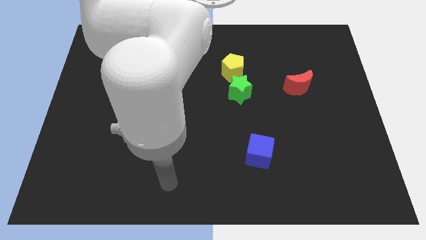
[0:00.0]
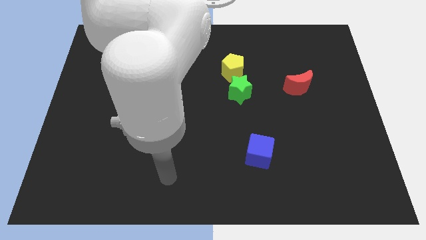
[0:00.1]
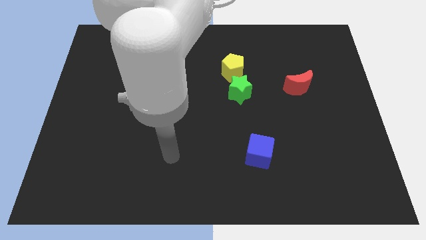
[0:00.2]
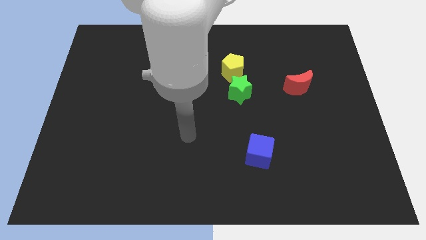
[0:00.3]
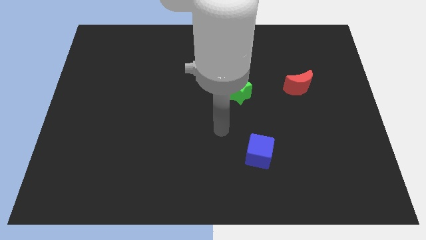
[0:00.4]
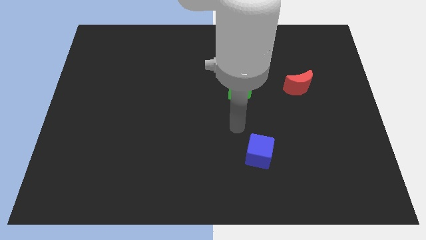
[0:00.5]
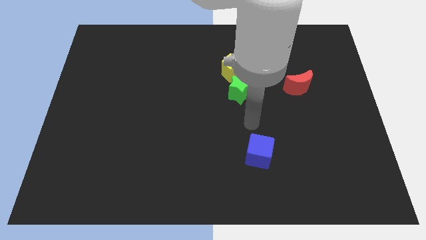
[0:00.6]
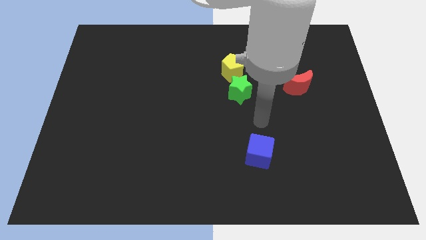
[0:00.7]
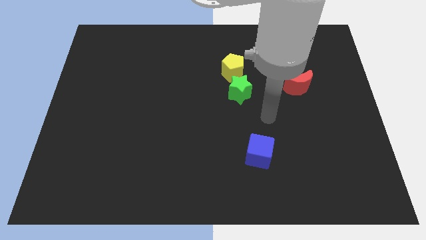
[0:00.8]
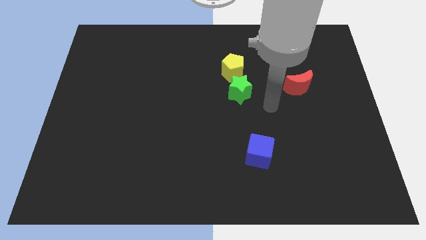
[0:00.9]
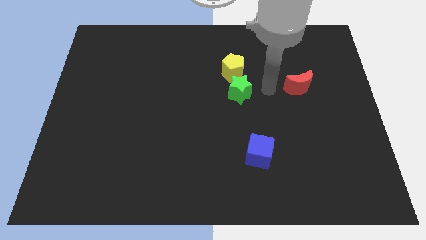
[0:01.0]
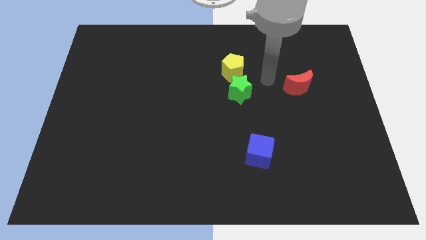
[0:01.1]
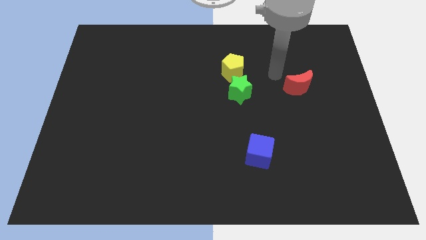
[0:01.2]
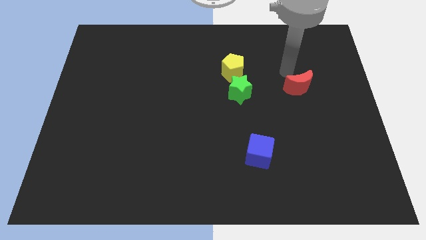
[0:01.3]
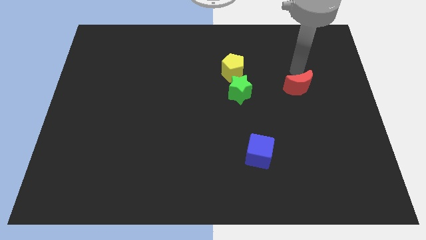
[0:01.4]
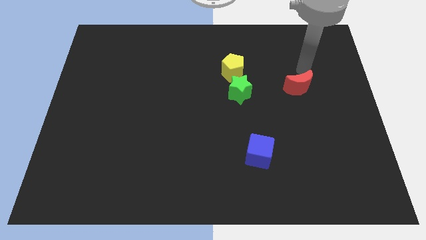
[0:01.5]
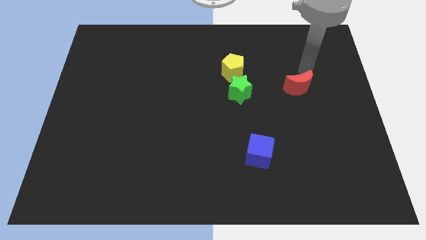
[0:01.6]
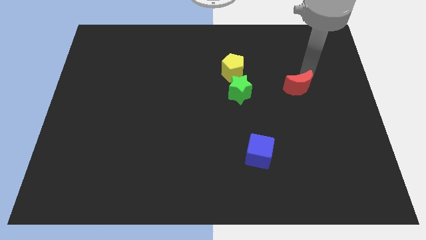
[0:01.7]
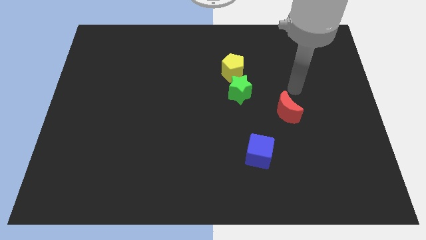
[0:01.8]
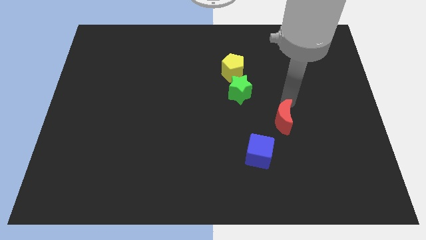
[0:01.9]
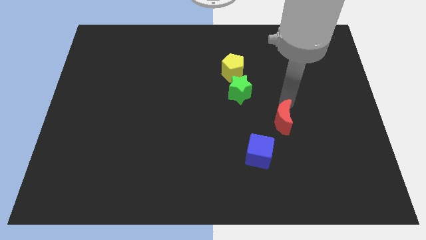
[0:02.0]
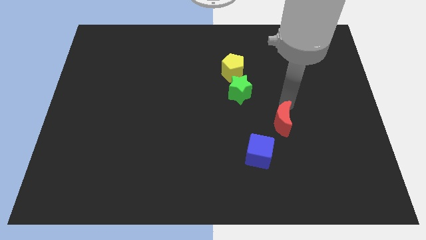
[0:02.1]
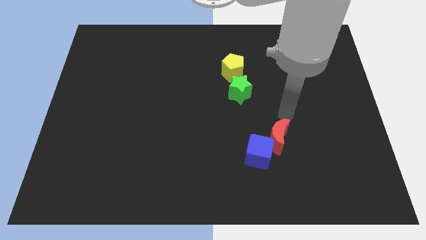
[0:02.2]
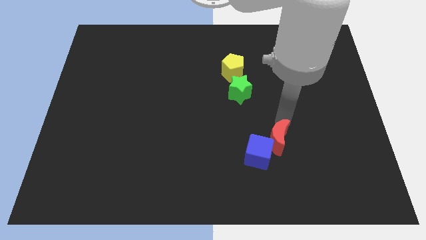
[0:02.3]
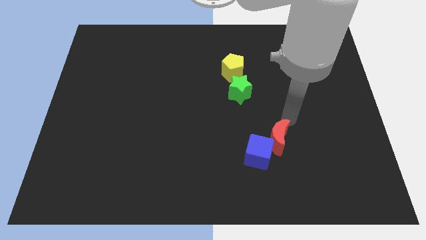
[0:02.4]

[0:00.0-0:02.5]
move the moon next to the blue cube

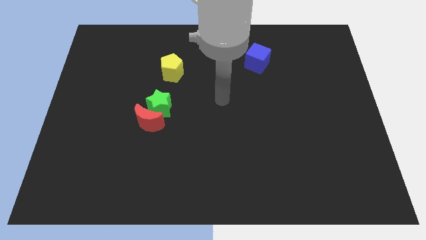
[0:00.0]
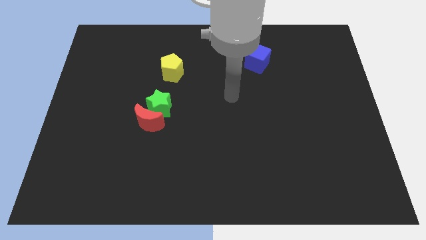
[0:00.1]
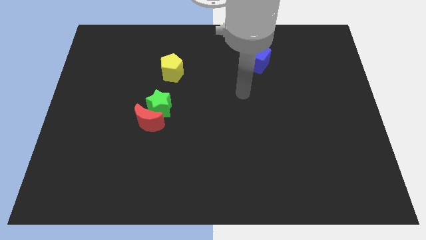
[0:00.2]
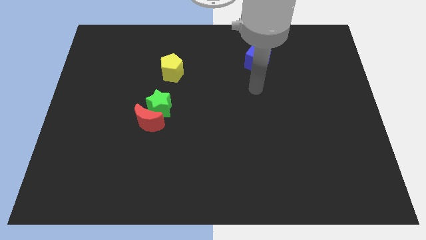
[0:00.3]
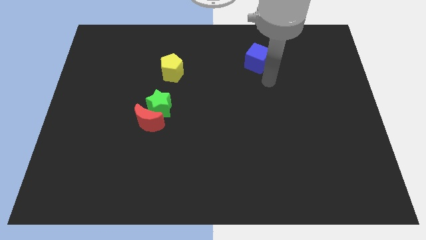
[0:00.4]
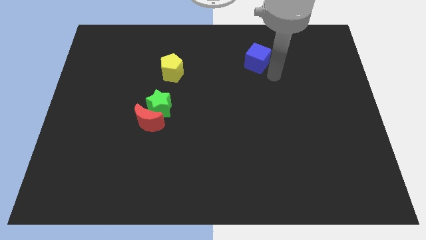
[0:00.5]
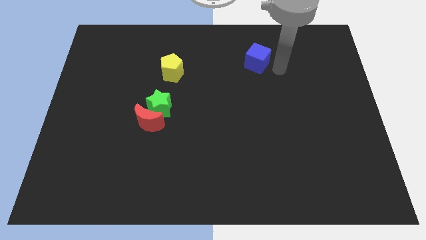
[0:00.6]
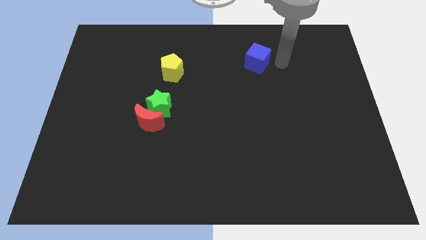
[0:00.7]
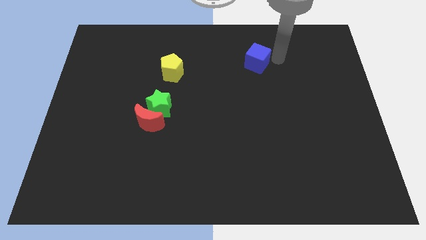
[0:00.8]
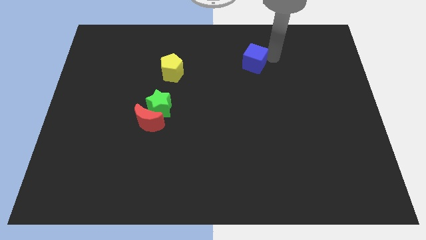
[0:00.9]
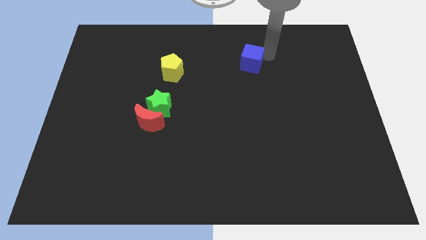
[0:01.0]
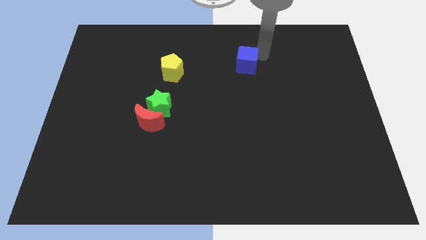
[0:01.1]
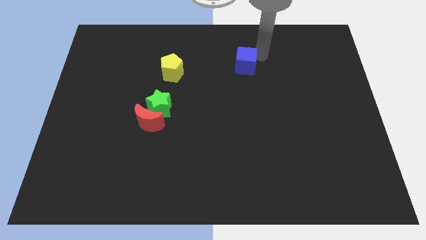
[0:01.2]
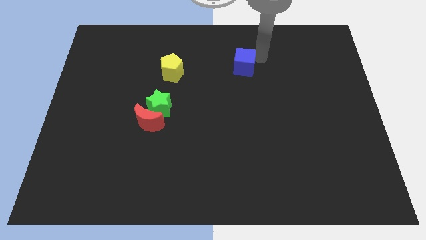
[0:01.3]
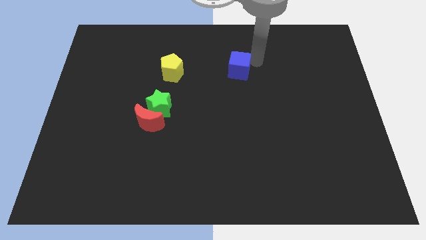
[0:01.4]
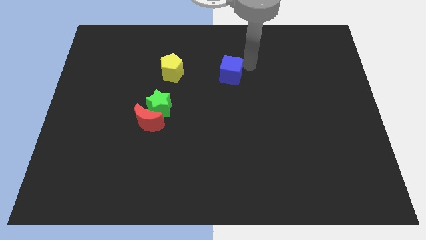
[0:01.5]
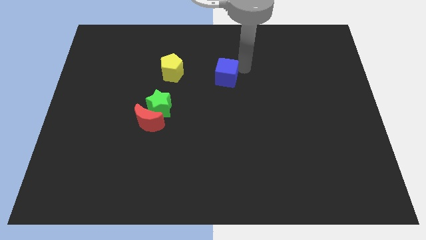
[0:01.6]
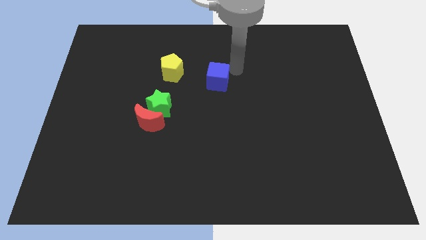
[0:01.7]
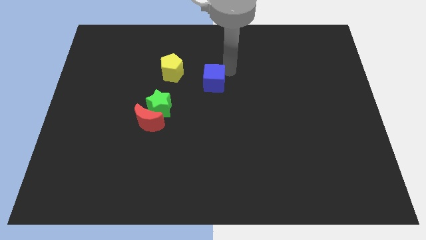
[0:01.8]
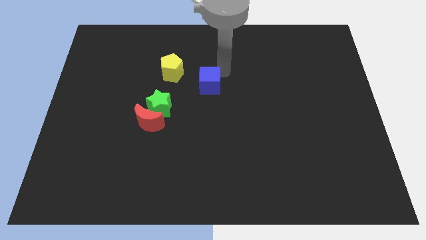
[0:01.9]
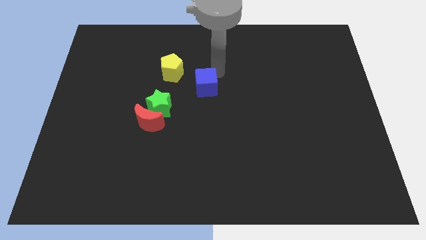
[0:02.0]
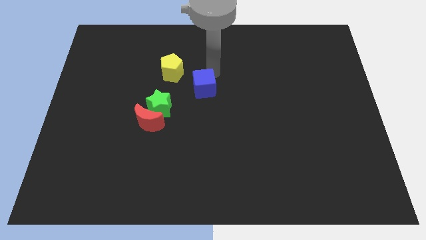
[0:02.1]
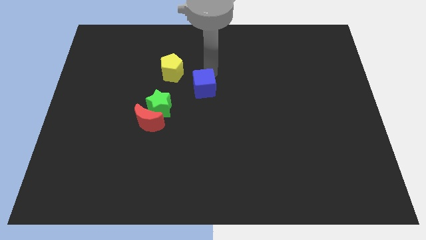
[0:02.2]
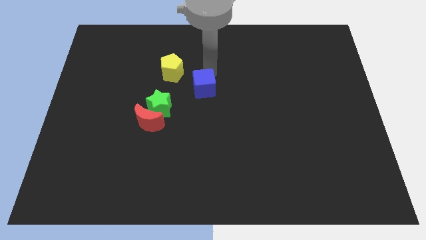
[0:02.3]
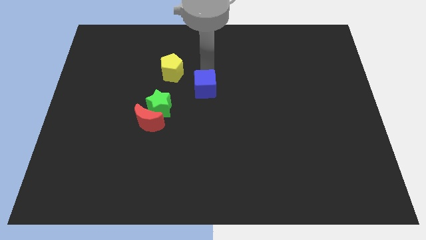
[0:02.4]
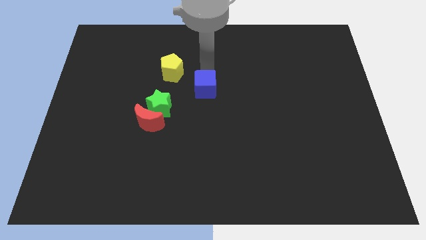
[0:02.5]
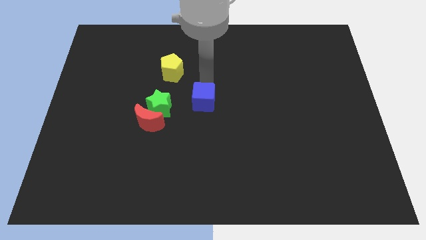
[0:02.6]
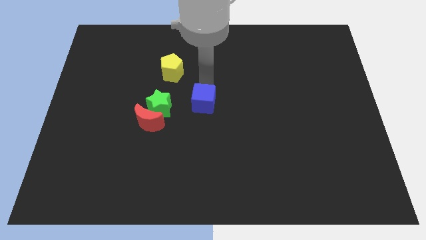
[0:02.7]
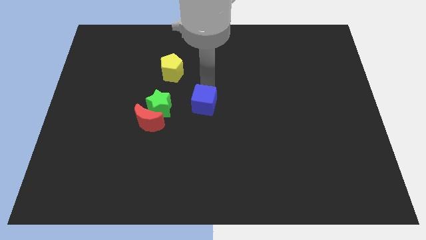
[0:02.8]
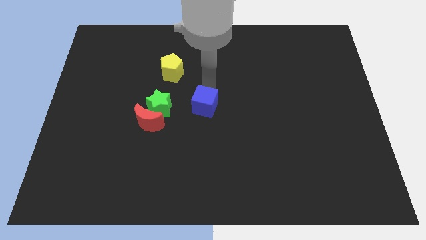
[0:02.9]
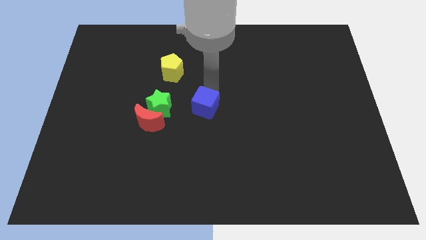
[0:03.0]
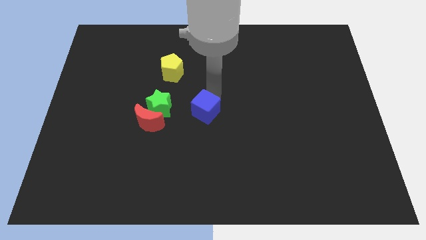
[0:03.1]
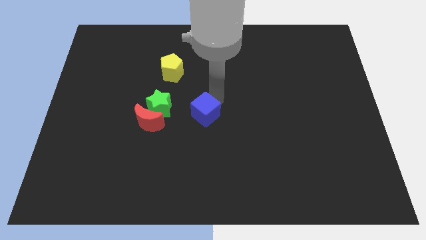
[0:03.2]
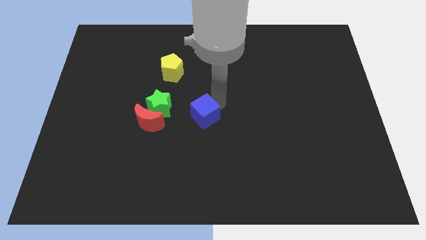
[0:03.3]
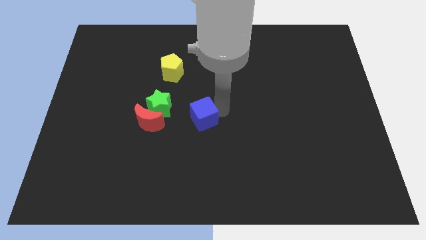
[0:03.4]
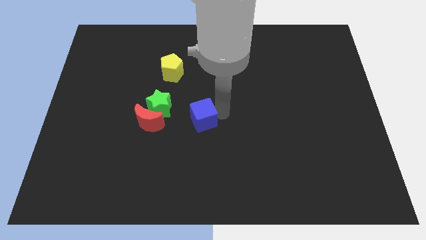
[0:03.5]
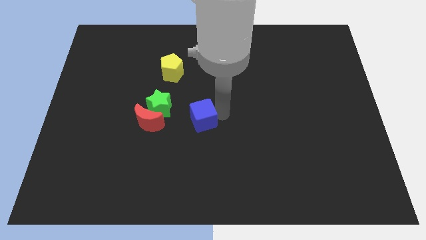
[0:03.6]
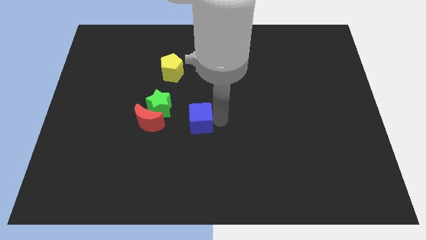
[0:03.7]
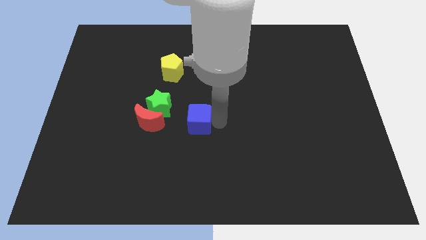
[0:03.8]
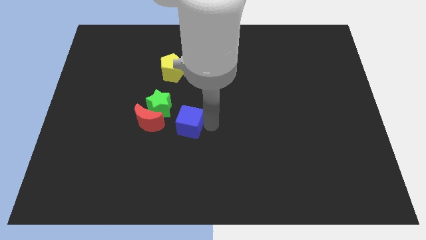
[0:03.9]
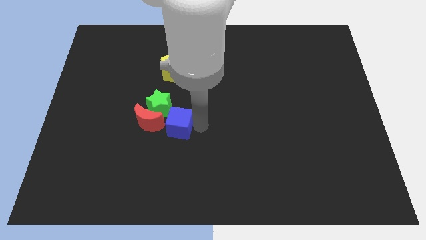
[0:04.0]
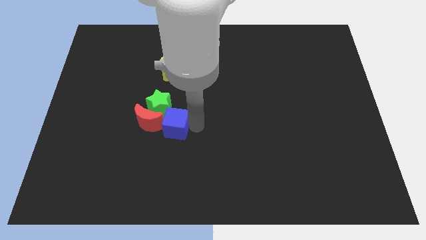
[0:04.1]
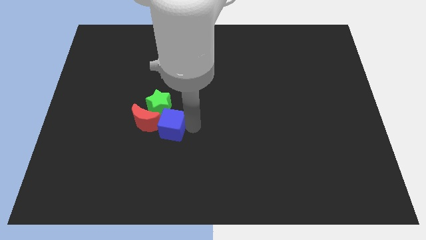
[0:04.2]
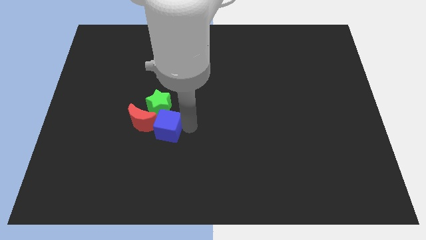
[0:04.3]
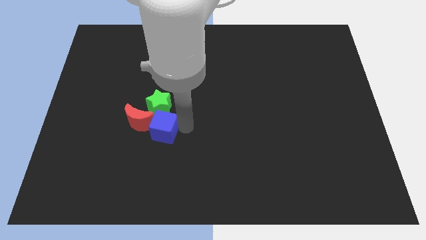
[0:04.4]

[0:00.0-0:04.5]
put the blue block next to the red moon

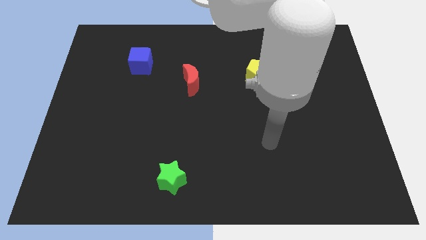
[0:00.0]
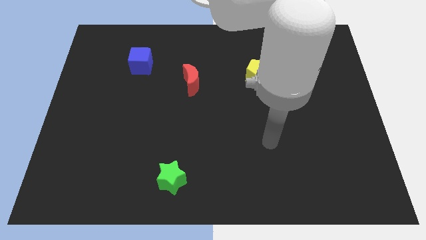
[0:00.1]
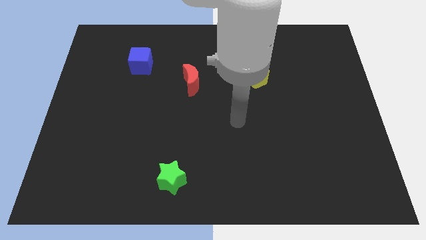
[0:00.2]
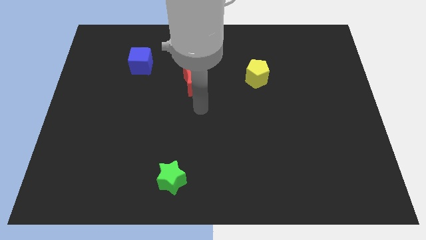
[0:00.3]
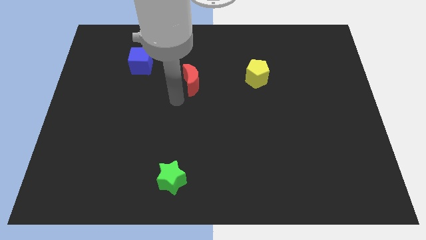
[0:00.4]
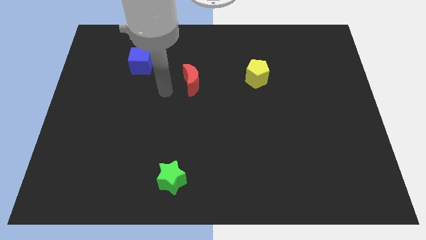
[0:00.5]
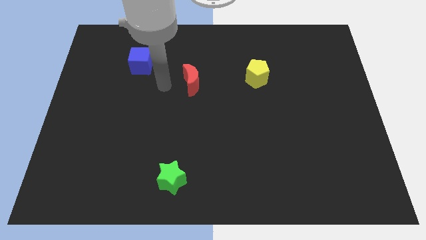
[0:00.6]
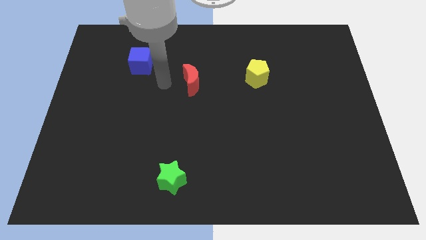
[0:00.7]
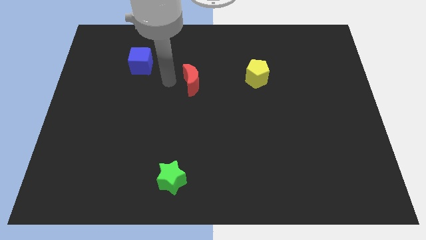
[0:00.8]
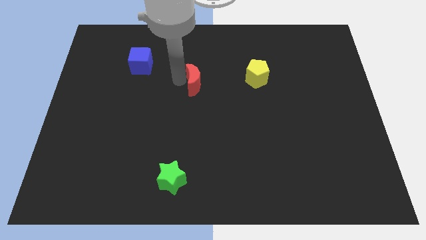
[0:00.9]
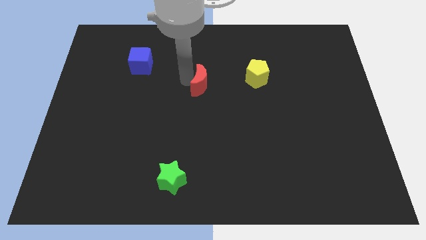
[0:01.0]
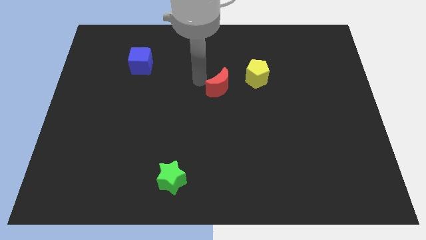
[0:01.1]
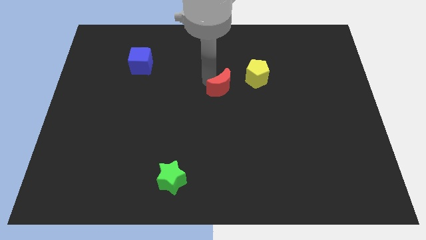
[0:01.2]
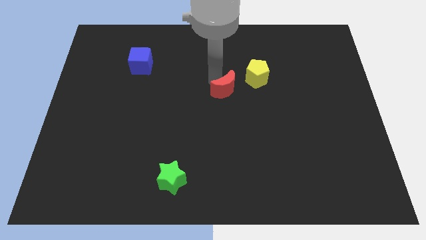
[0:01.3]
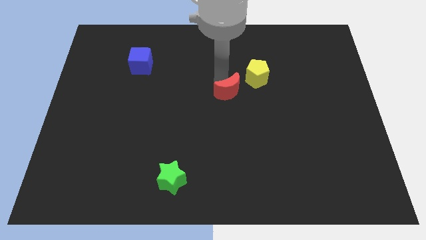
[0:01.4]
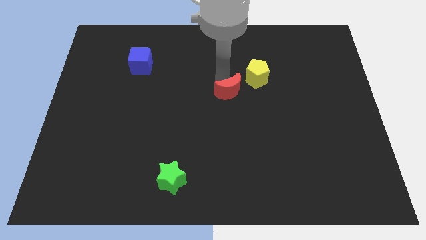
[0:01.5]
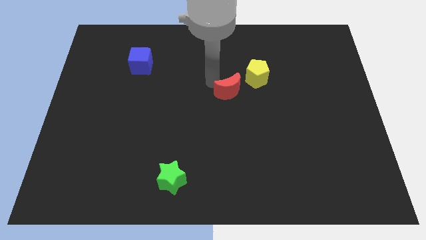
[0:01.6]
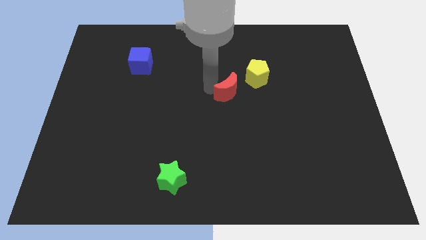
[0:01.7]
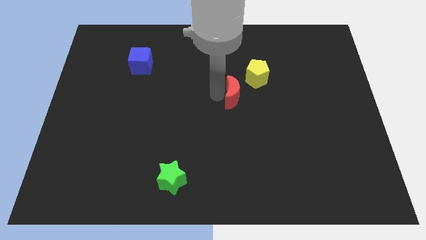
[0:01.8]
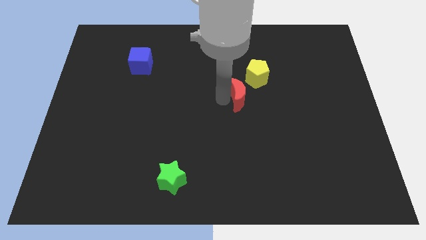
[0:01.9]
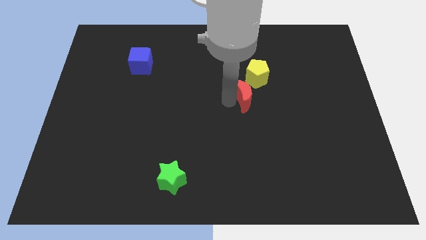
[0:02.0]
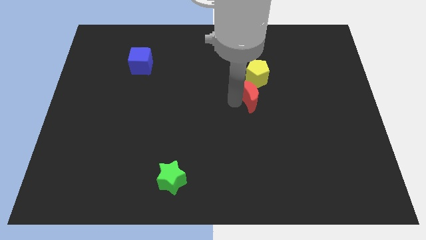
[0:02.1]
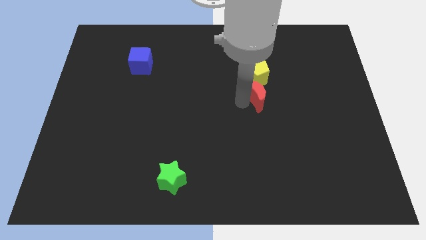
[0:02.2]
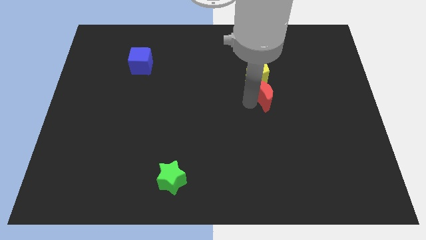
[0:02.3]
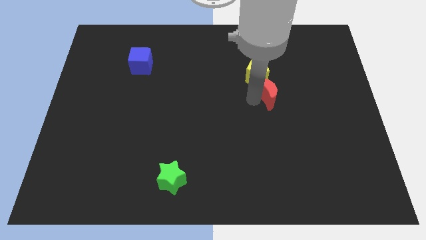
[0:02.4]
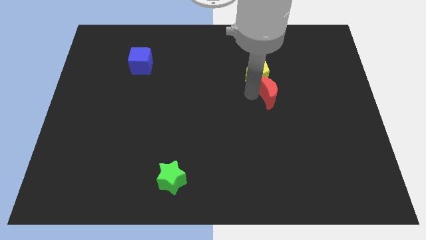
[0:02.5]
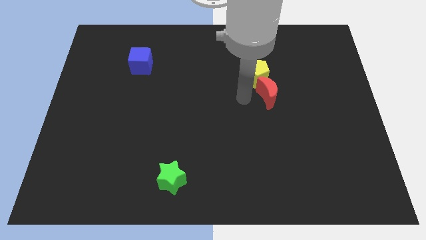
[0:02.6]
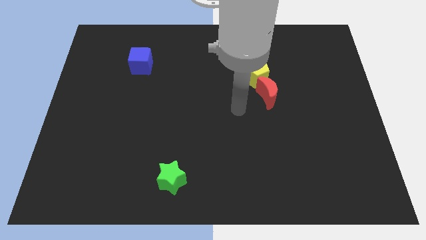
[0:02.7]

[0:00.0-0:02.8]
move the red block next to the yellow block
